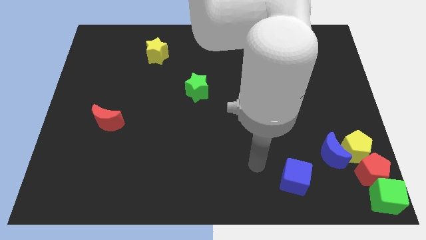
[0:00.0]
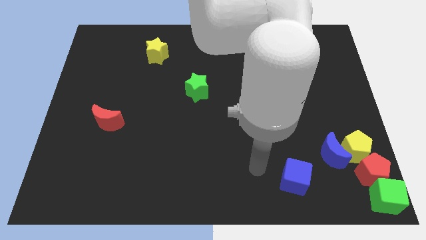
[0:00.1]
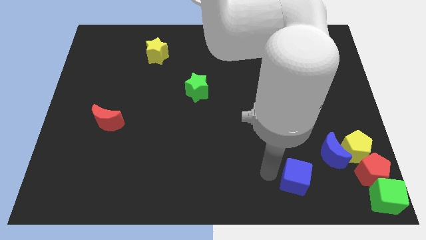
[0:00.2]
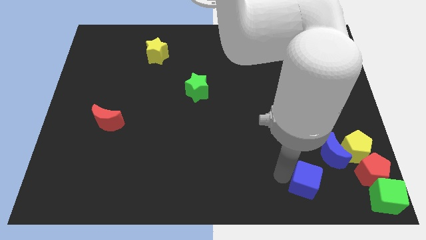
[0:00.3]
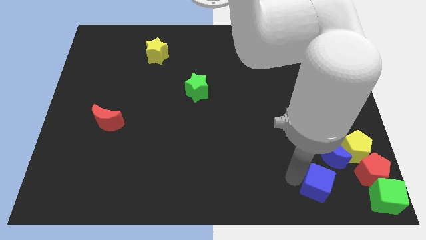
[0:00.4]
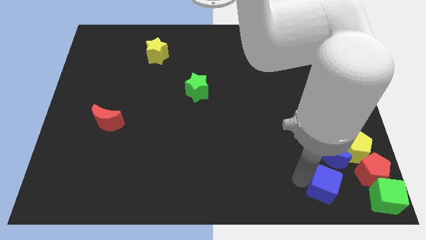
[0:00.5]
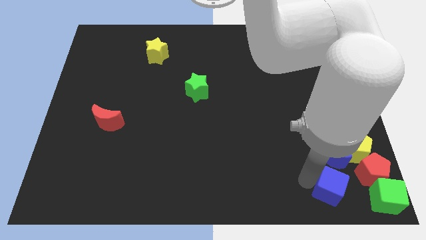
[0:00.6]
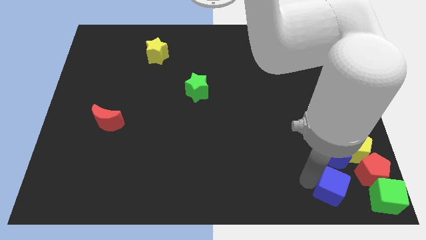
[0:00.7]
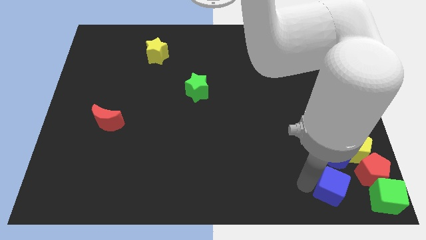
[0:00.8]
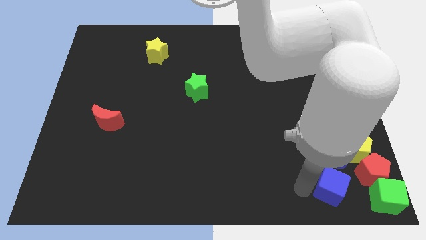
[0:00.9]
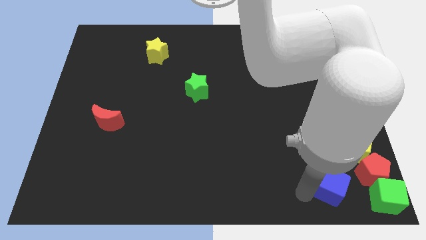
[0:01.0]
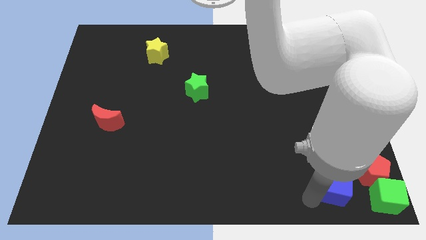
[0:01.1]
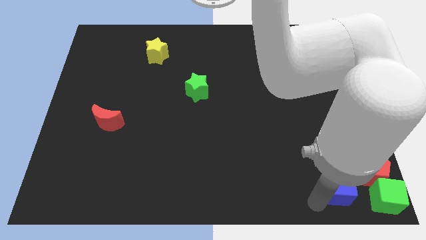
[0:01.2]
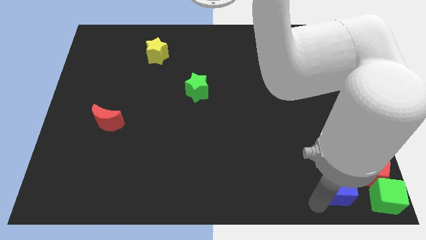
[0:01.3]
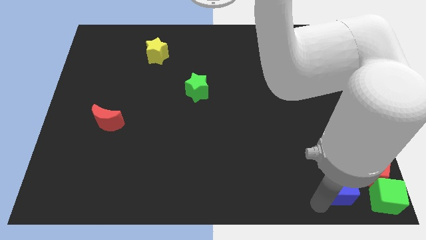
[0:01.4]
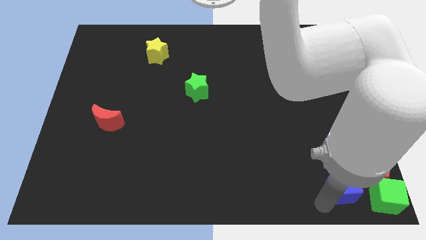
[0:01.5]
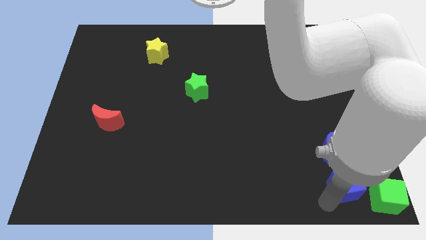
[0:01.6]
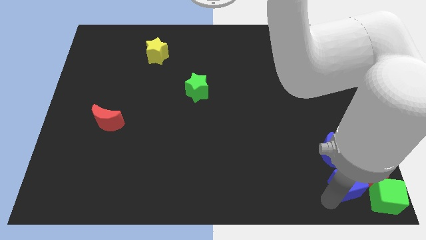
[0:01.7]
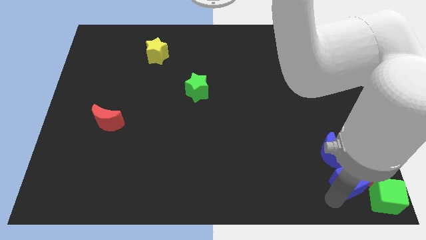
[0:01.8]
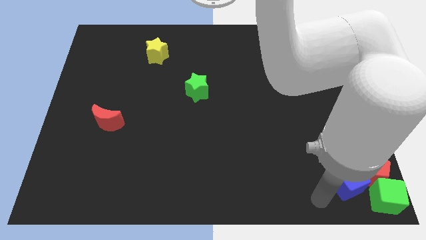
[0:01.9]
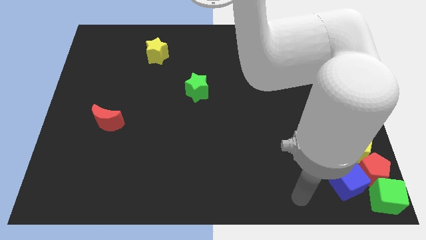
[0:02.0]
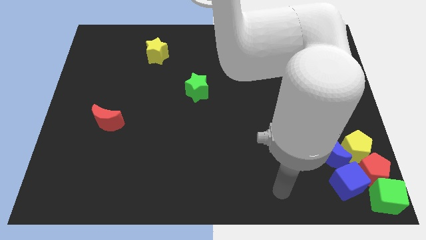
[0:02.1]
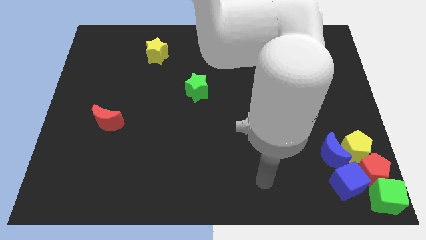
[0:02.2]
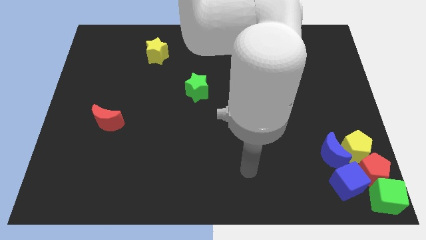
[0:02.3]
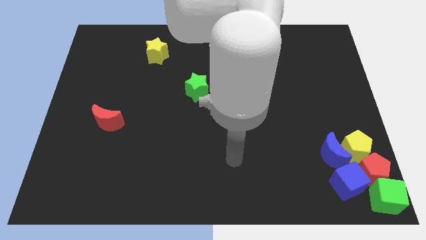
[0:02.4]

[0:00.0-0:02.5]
move the blue cube to the left of the red pentagon

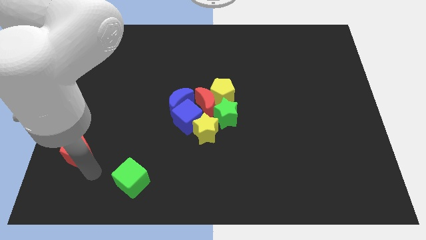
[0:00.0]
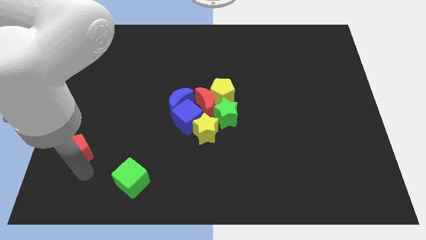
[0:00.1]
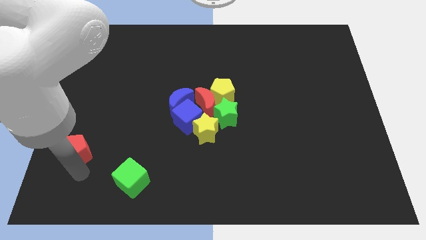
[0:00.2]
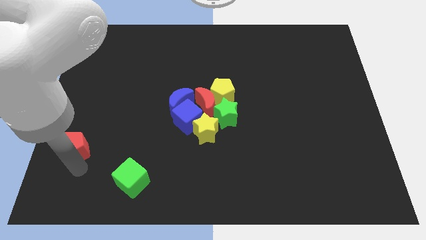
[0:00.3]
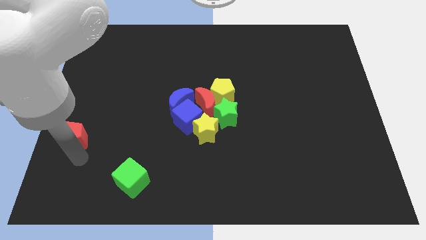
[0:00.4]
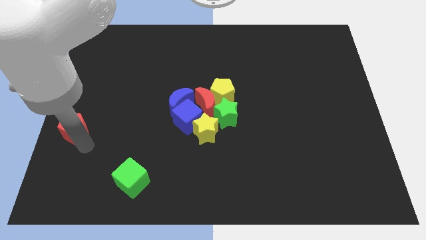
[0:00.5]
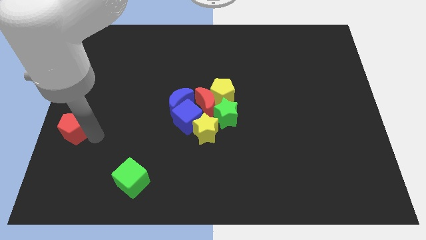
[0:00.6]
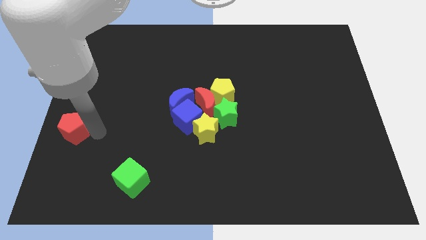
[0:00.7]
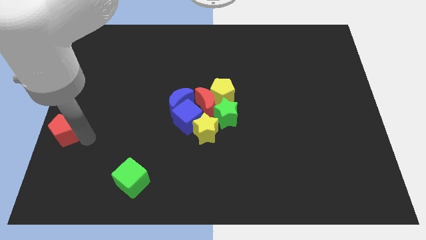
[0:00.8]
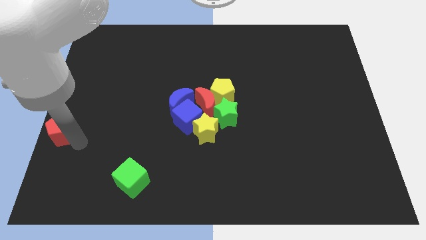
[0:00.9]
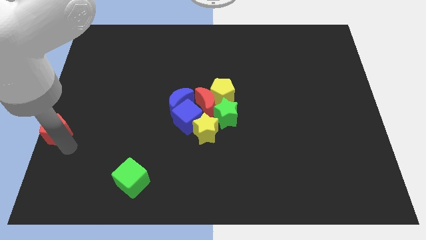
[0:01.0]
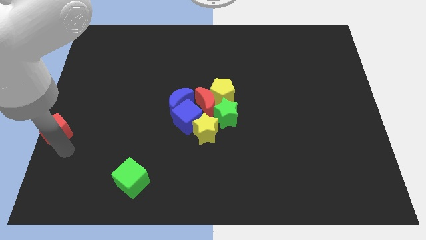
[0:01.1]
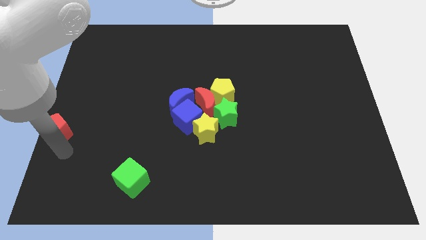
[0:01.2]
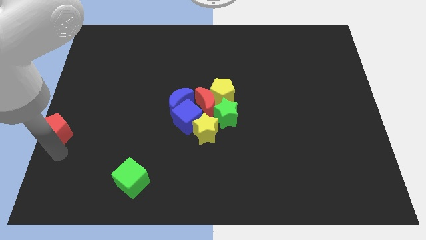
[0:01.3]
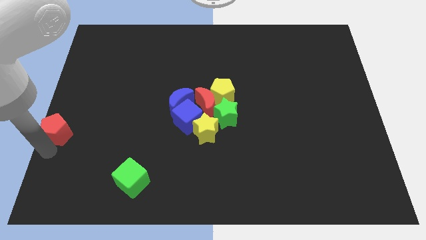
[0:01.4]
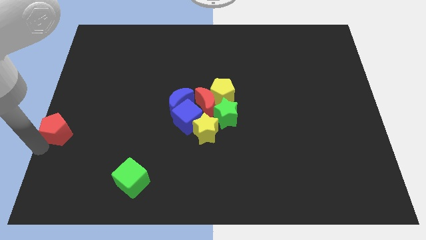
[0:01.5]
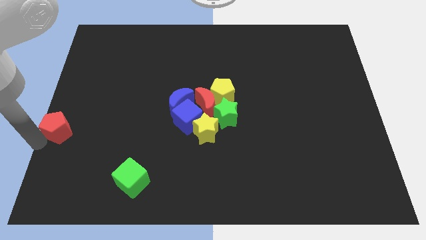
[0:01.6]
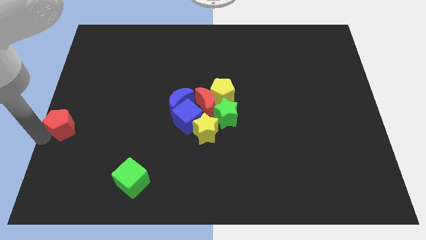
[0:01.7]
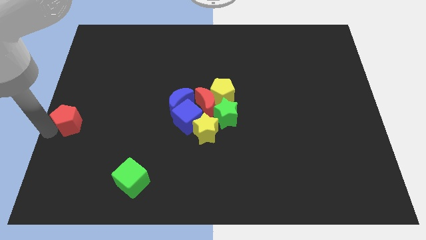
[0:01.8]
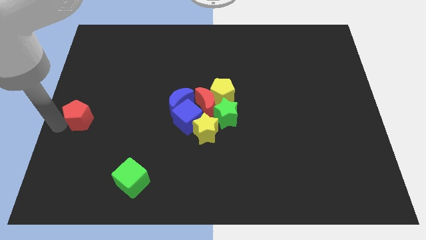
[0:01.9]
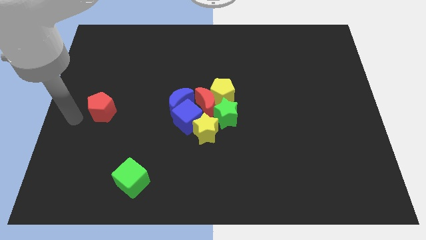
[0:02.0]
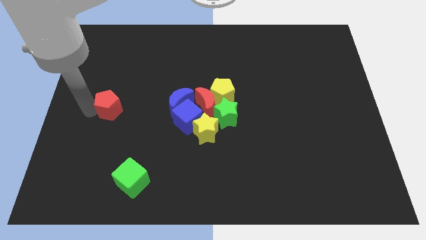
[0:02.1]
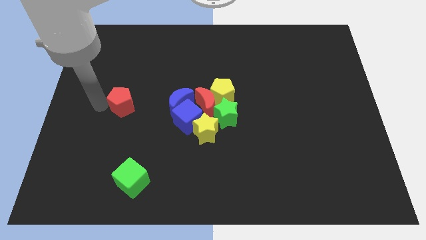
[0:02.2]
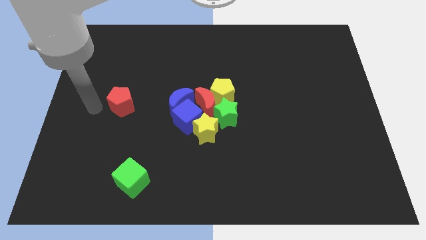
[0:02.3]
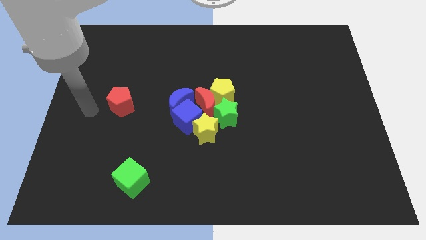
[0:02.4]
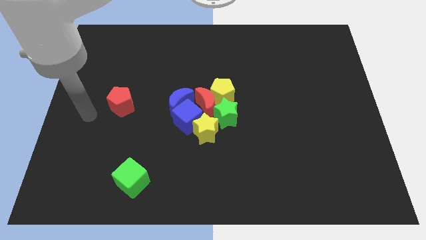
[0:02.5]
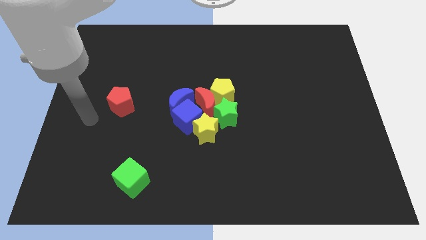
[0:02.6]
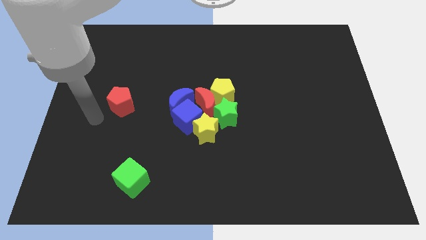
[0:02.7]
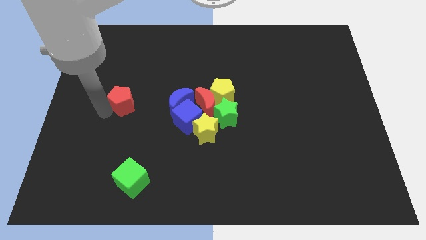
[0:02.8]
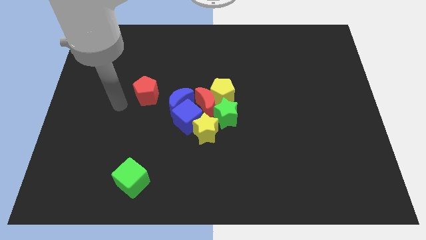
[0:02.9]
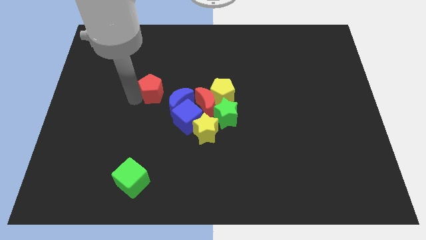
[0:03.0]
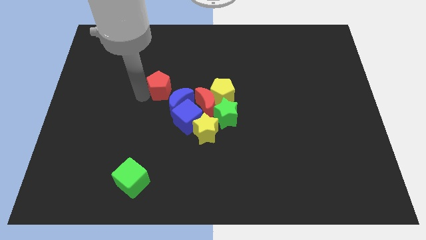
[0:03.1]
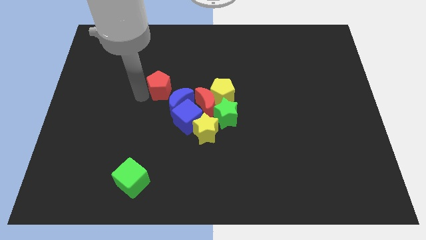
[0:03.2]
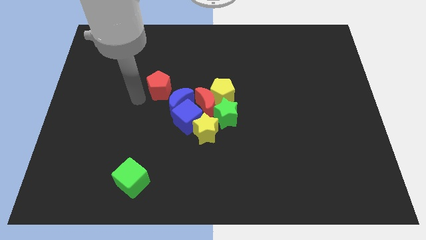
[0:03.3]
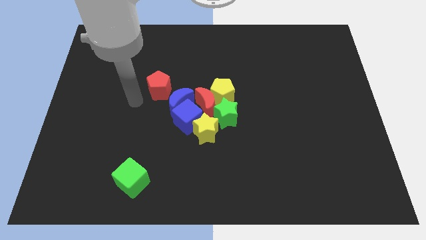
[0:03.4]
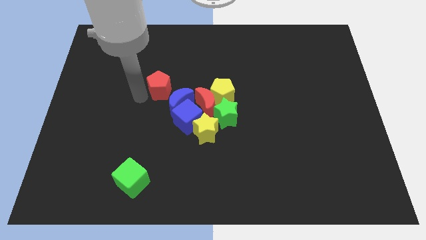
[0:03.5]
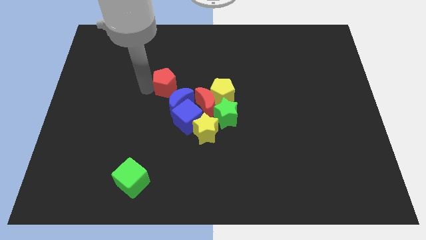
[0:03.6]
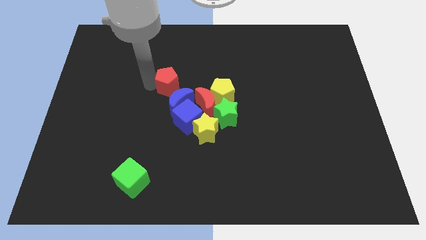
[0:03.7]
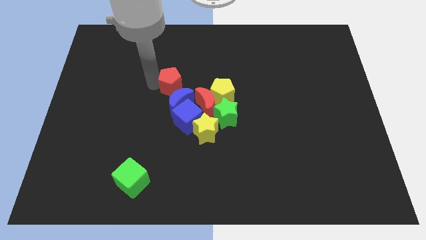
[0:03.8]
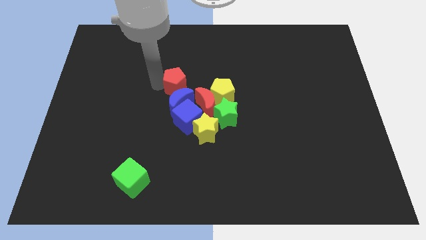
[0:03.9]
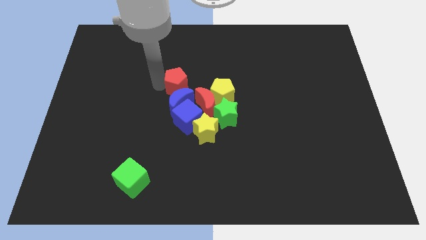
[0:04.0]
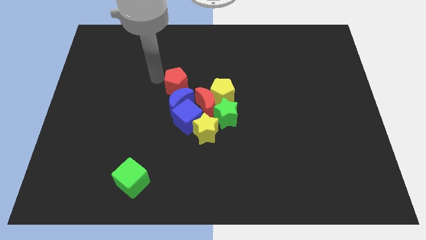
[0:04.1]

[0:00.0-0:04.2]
move red pentagon diagonally above blue moon

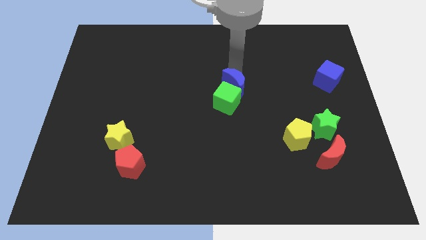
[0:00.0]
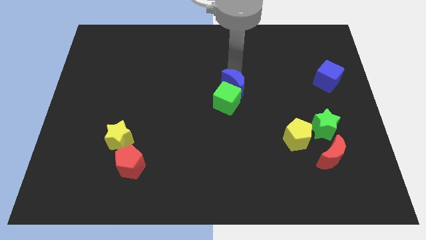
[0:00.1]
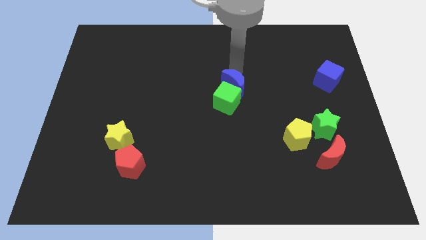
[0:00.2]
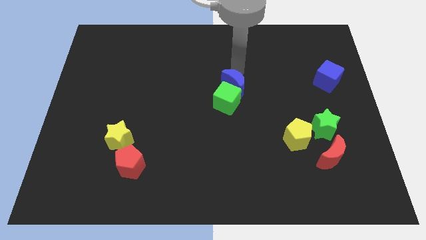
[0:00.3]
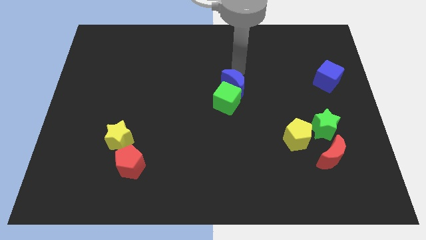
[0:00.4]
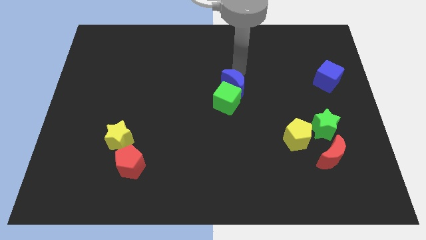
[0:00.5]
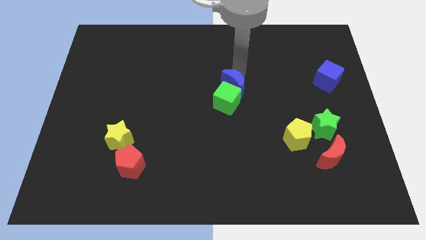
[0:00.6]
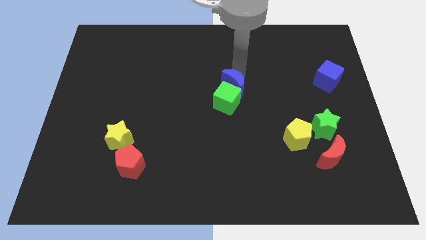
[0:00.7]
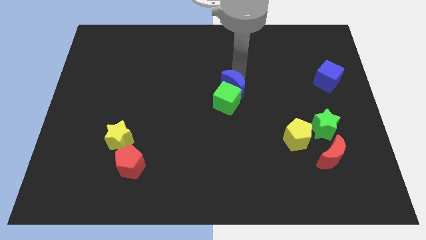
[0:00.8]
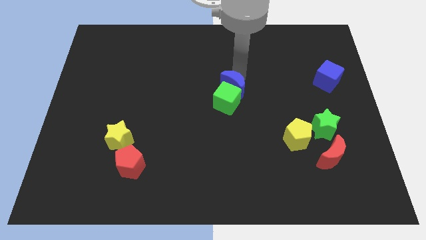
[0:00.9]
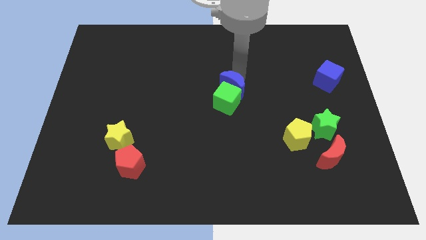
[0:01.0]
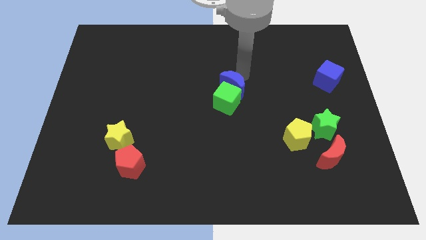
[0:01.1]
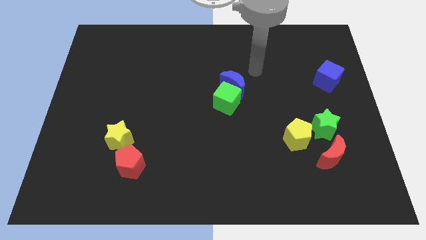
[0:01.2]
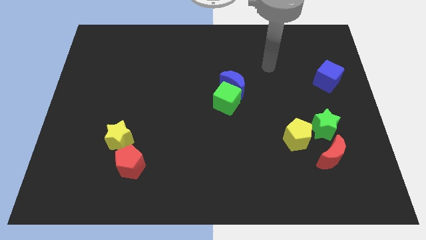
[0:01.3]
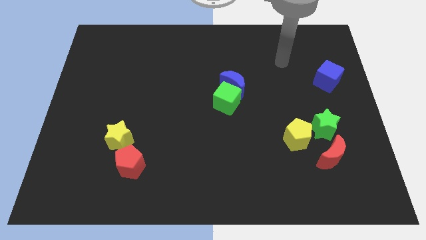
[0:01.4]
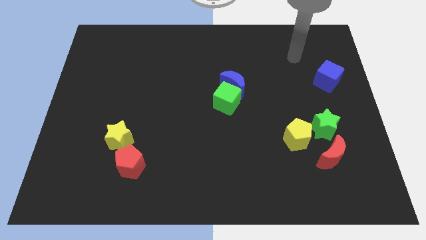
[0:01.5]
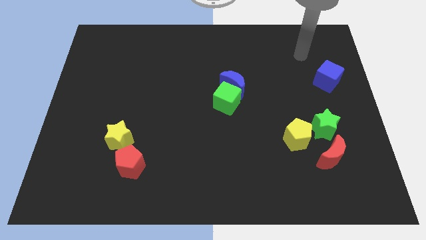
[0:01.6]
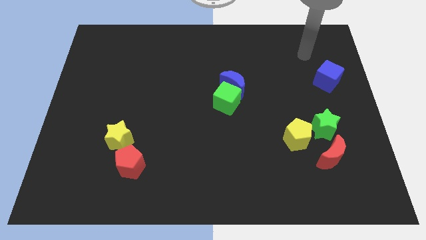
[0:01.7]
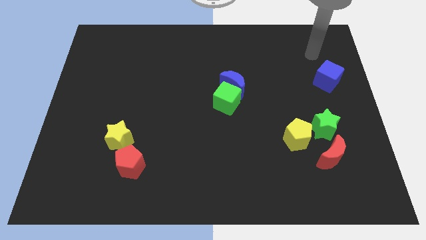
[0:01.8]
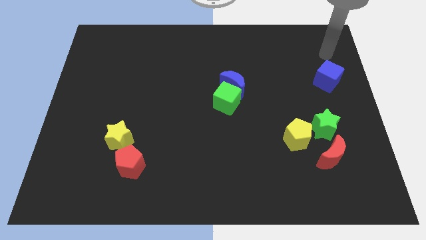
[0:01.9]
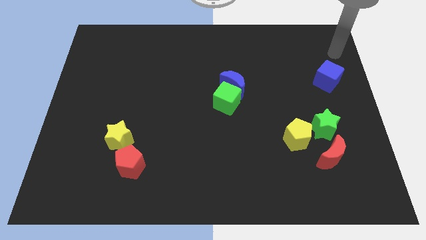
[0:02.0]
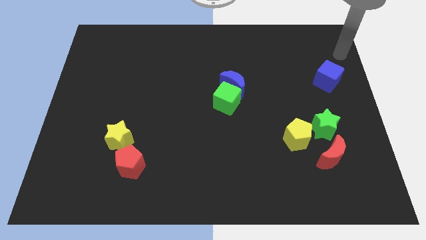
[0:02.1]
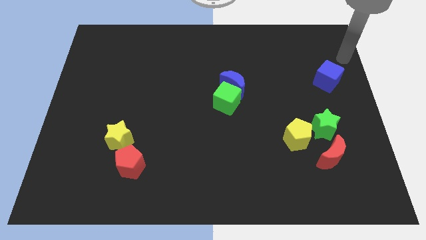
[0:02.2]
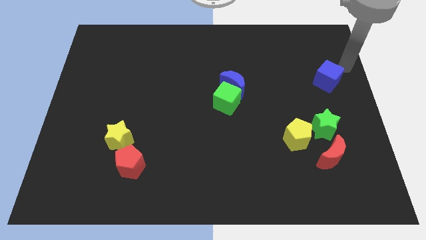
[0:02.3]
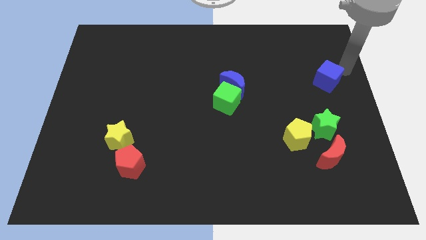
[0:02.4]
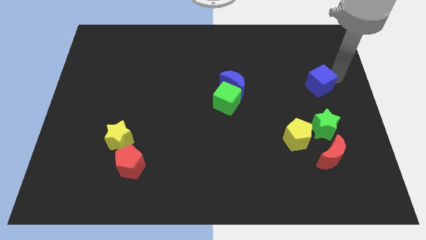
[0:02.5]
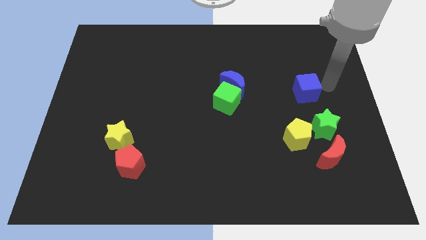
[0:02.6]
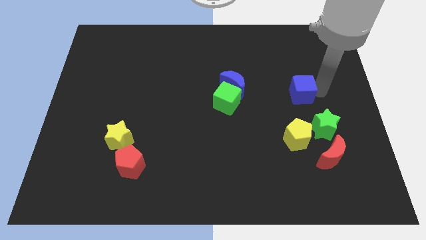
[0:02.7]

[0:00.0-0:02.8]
move your arm towards the blue moon
